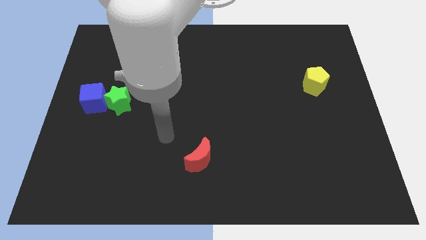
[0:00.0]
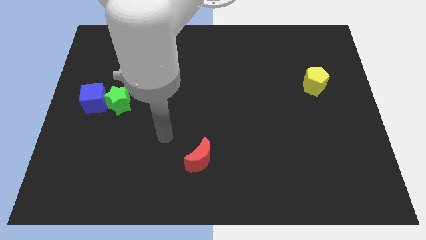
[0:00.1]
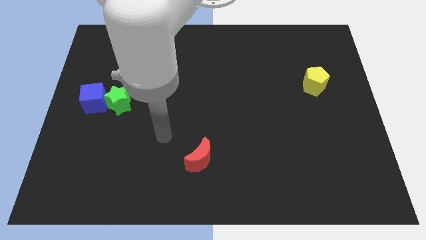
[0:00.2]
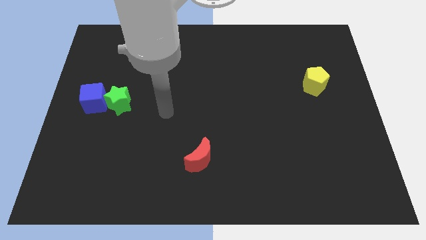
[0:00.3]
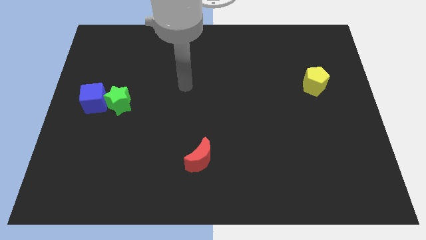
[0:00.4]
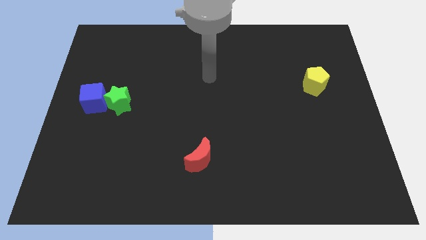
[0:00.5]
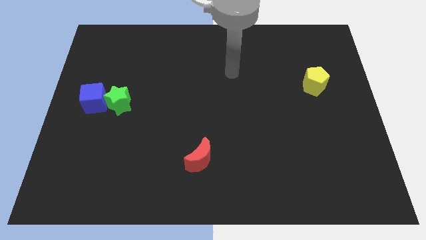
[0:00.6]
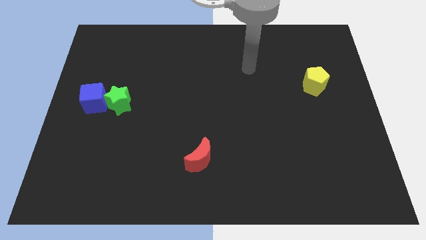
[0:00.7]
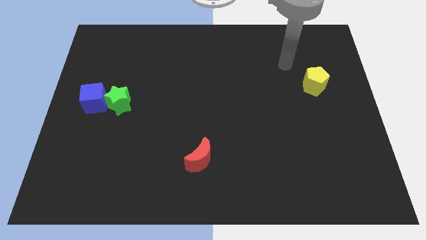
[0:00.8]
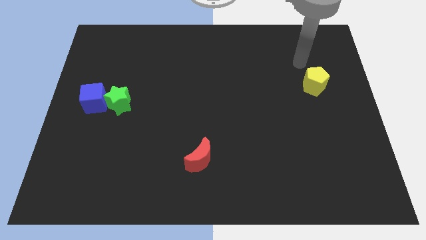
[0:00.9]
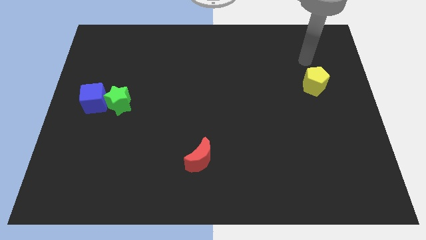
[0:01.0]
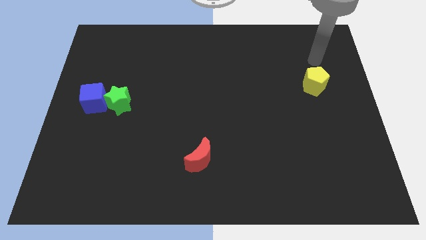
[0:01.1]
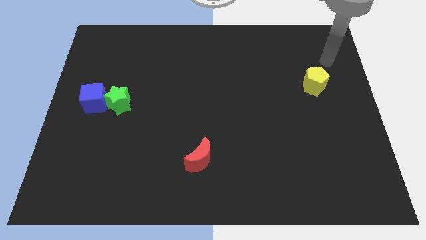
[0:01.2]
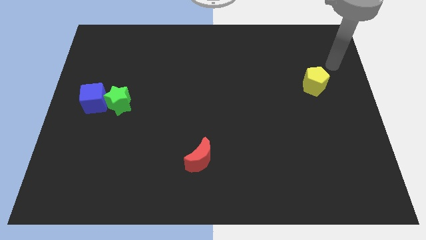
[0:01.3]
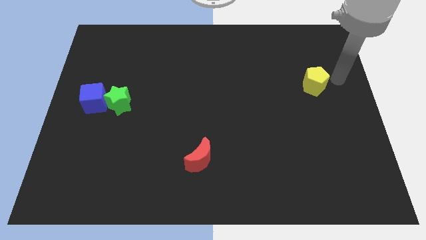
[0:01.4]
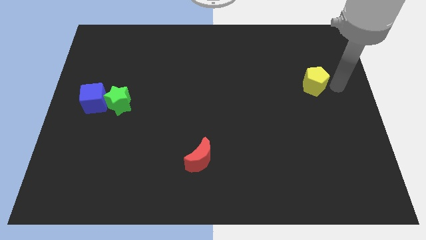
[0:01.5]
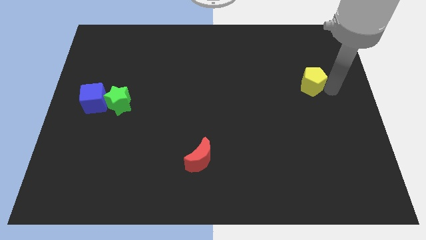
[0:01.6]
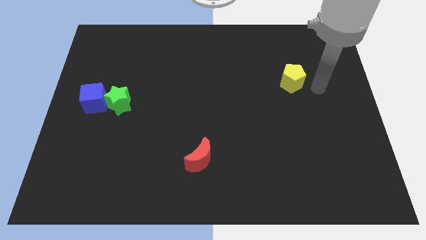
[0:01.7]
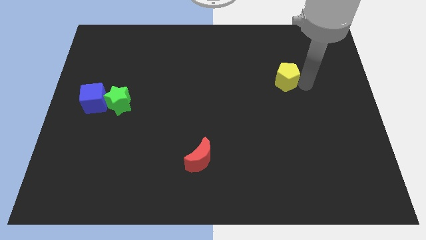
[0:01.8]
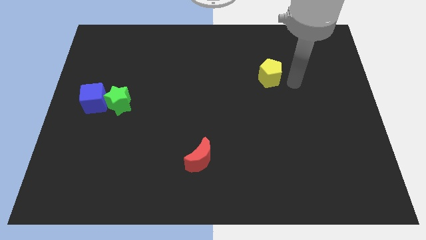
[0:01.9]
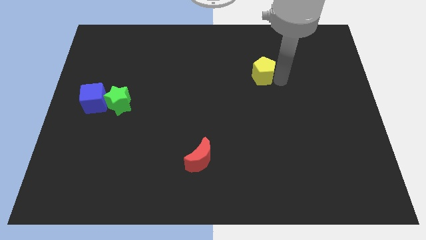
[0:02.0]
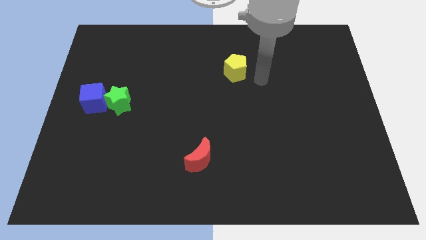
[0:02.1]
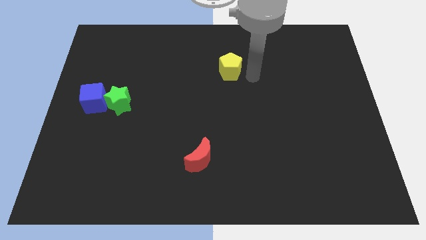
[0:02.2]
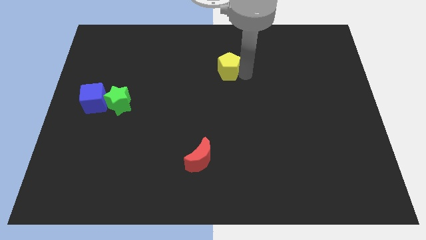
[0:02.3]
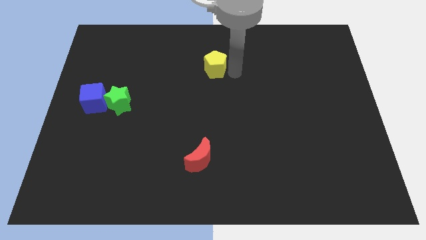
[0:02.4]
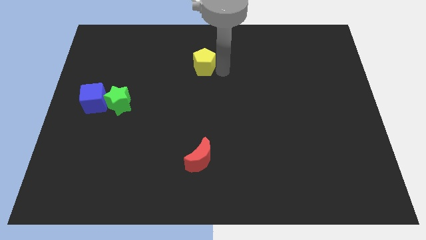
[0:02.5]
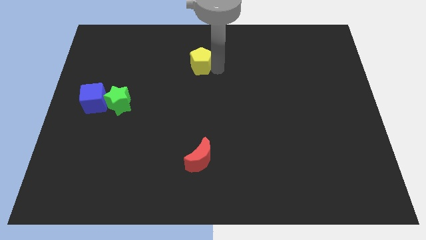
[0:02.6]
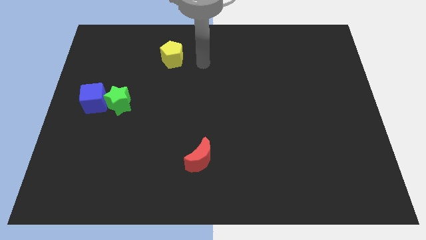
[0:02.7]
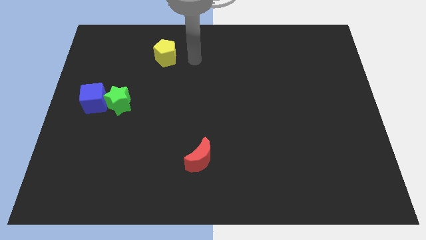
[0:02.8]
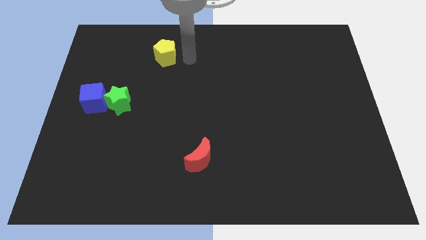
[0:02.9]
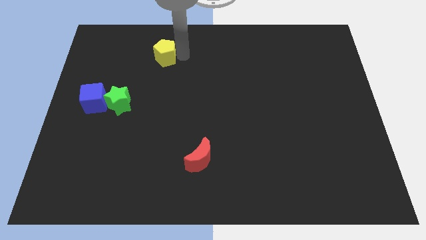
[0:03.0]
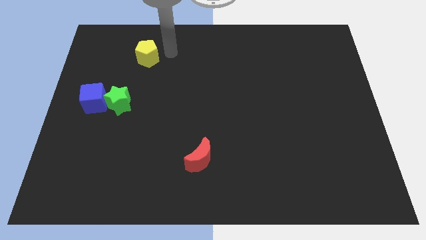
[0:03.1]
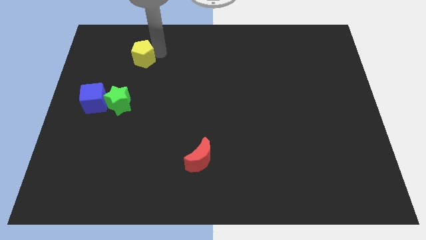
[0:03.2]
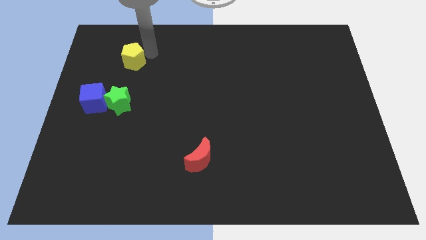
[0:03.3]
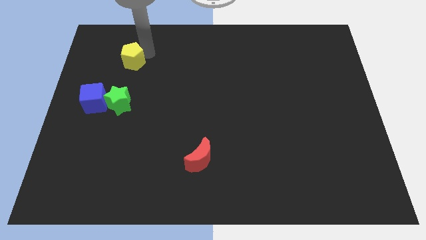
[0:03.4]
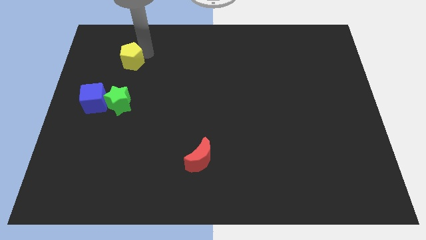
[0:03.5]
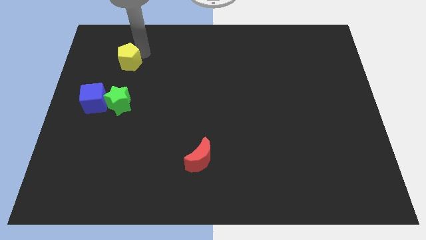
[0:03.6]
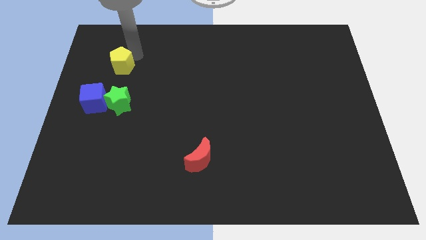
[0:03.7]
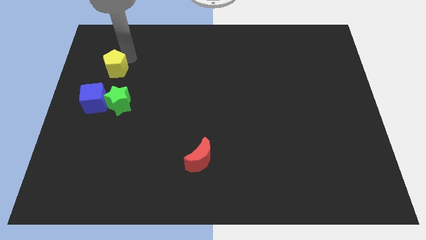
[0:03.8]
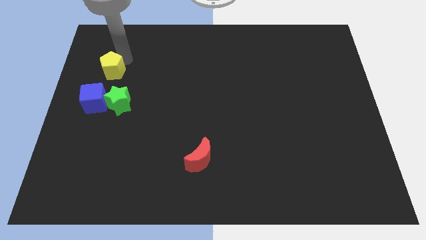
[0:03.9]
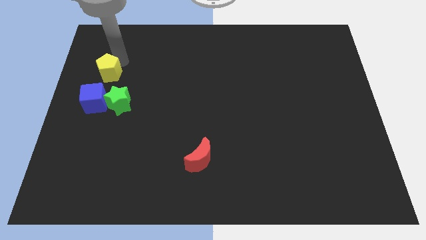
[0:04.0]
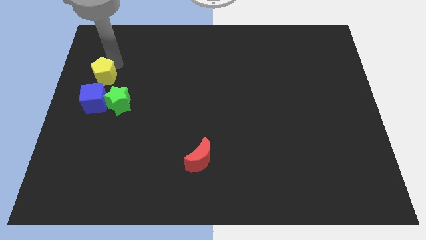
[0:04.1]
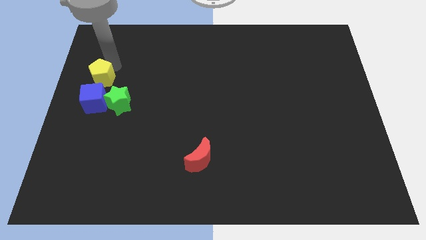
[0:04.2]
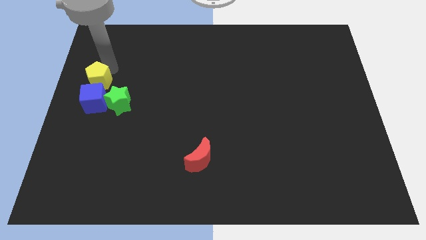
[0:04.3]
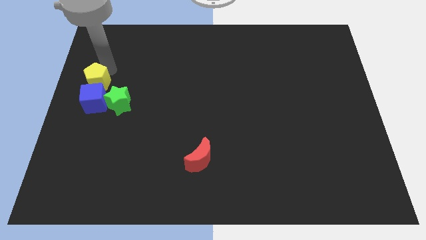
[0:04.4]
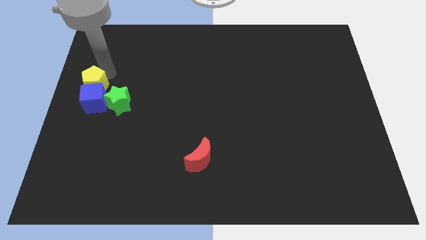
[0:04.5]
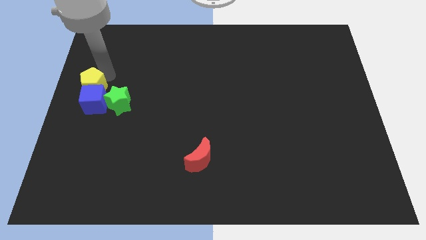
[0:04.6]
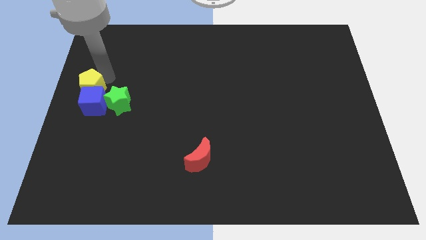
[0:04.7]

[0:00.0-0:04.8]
put the pentagon towards the cube

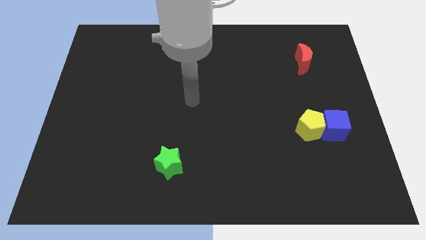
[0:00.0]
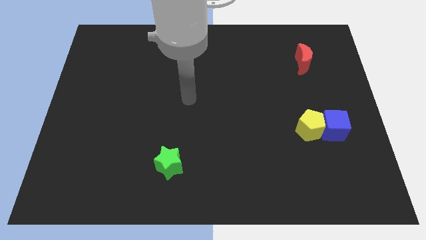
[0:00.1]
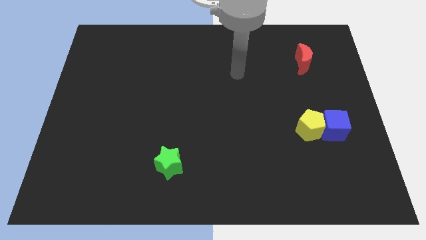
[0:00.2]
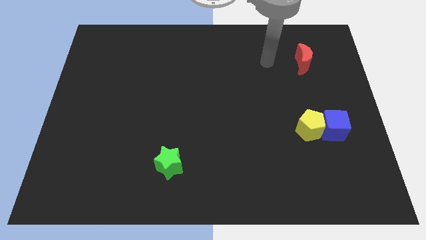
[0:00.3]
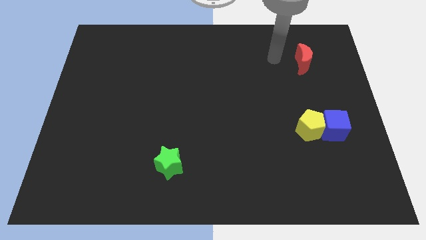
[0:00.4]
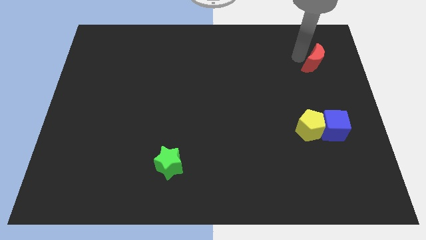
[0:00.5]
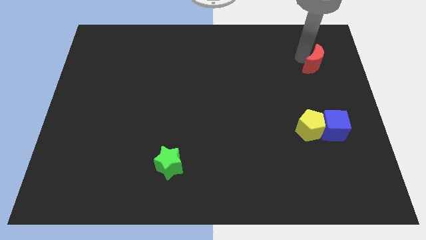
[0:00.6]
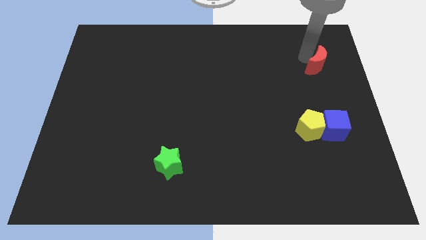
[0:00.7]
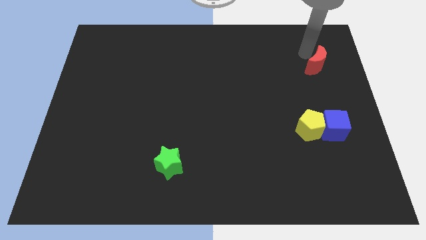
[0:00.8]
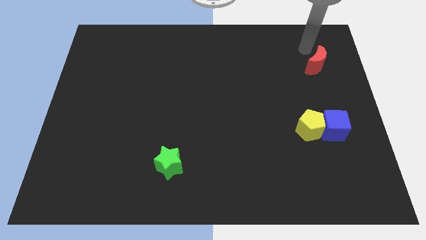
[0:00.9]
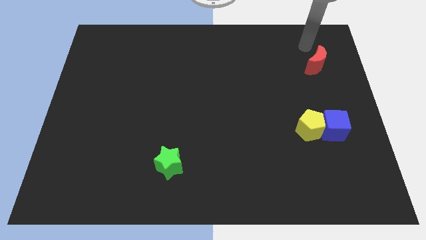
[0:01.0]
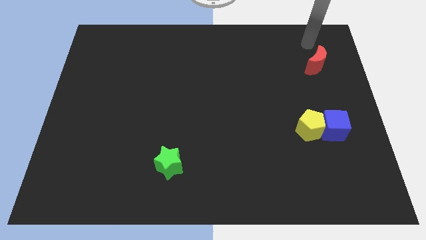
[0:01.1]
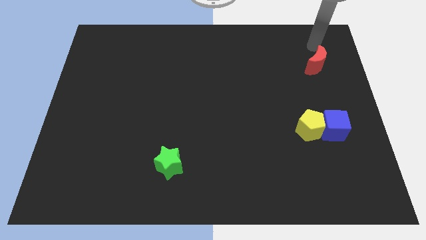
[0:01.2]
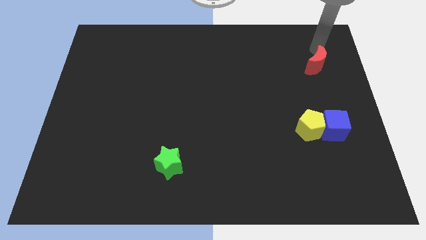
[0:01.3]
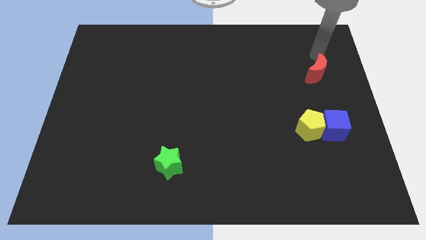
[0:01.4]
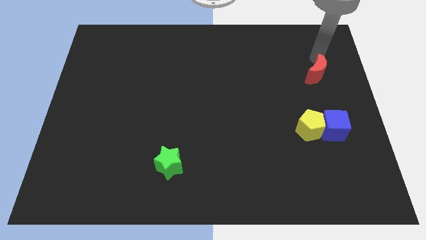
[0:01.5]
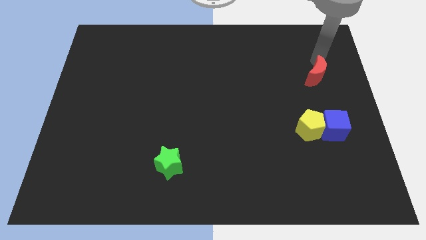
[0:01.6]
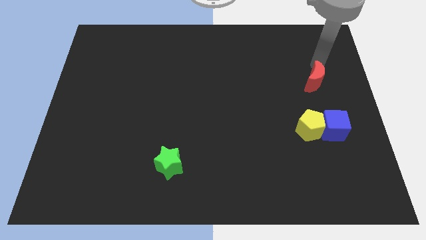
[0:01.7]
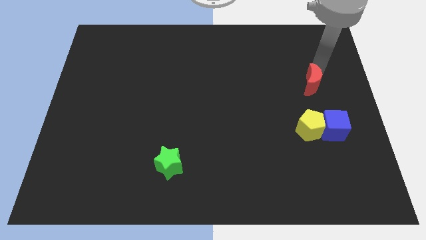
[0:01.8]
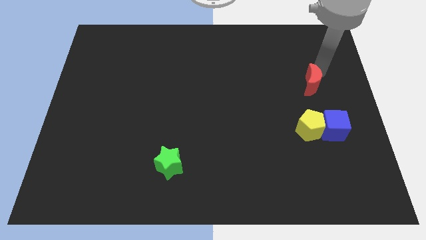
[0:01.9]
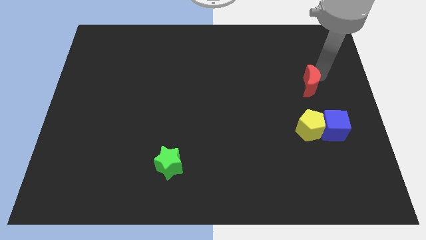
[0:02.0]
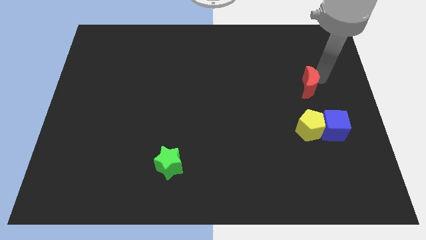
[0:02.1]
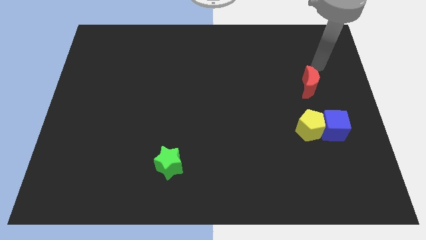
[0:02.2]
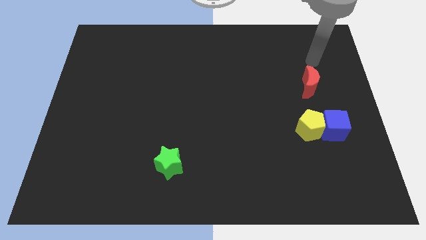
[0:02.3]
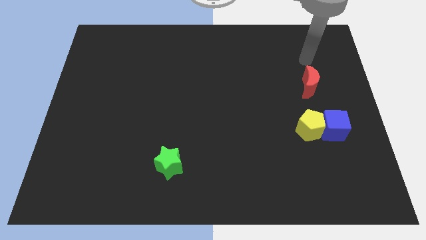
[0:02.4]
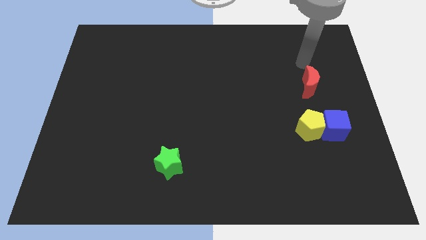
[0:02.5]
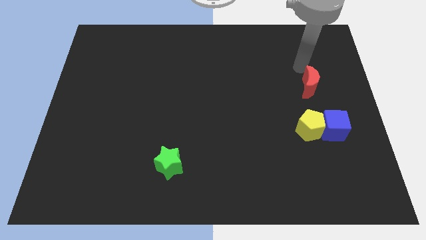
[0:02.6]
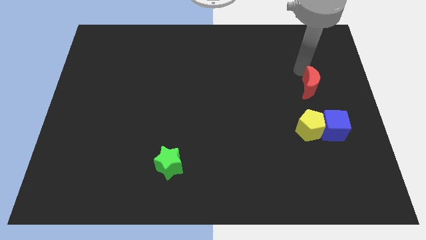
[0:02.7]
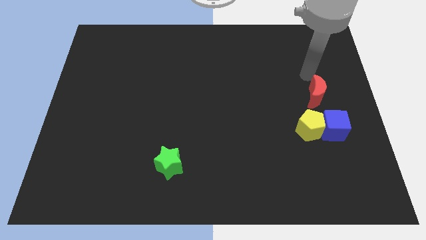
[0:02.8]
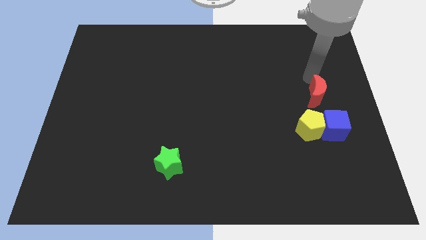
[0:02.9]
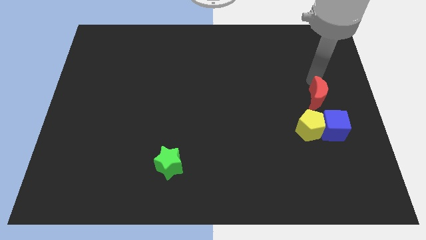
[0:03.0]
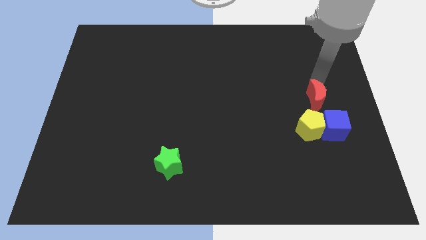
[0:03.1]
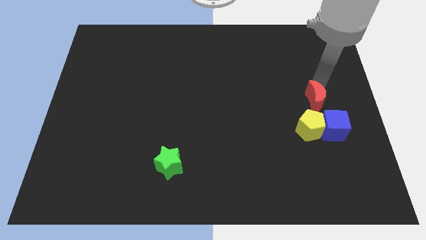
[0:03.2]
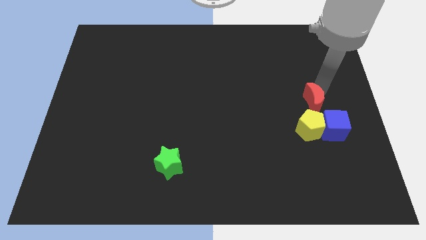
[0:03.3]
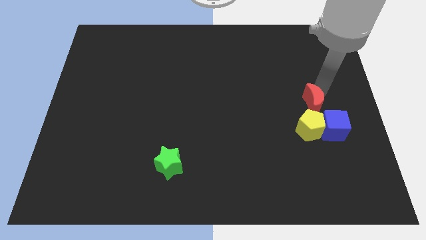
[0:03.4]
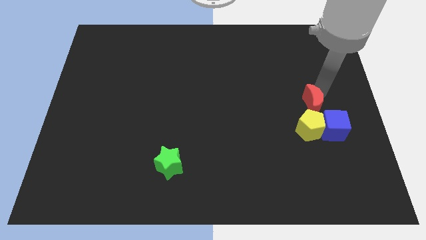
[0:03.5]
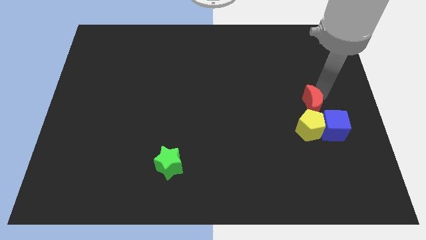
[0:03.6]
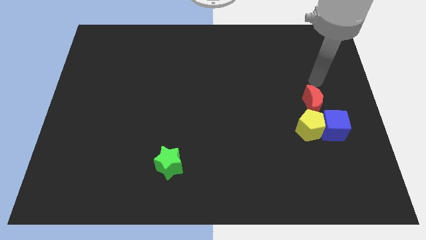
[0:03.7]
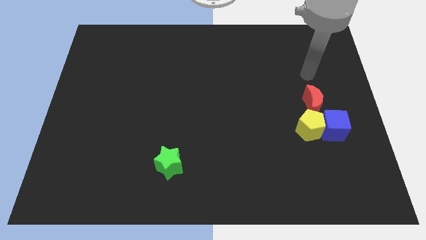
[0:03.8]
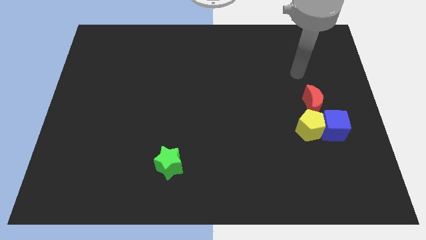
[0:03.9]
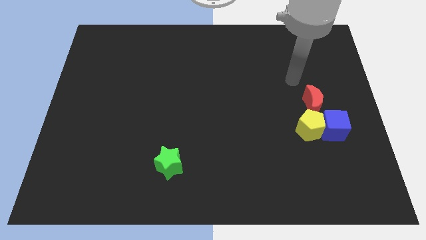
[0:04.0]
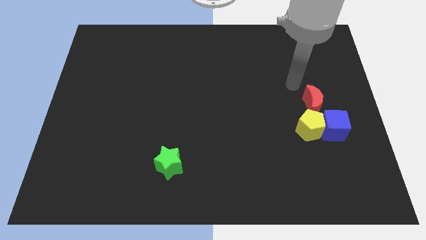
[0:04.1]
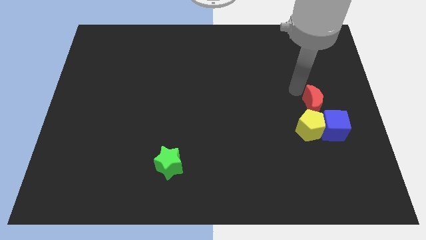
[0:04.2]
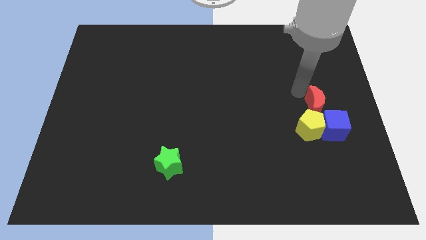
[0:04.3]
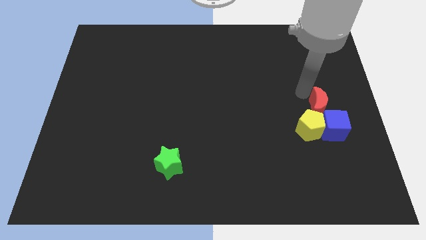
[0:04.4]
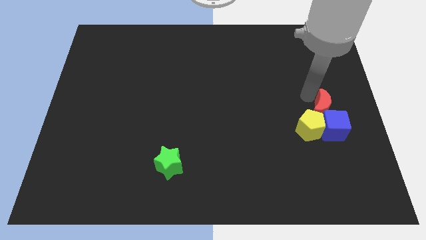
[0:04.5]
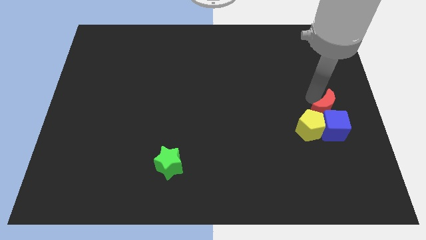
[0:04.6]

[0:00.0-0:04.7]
slide the red moon next to the blue cube
